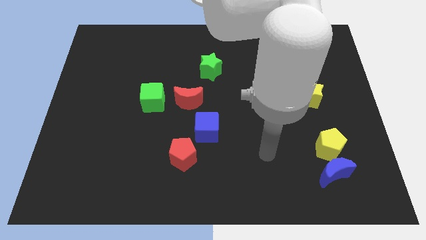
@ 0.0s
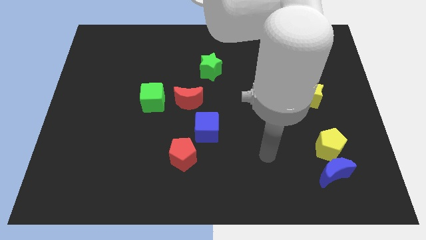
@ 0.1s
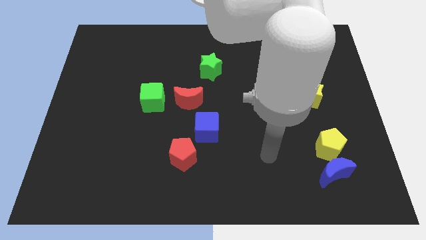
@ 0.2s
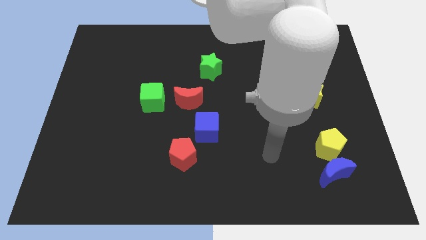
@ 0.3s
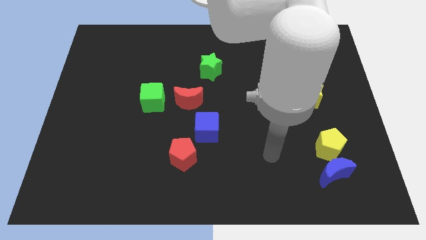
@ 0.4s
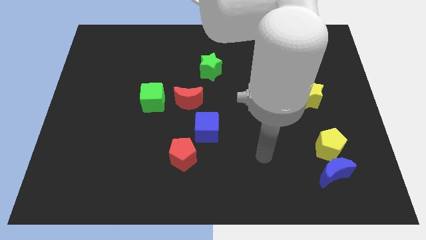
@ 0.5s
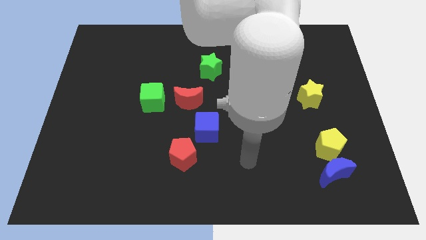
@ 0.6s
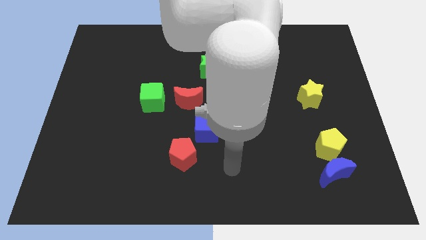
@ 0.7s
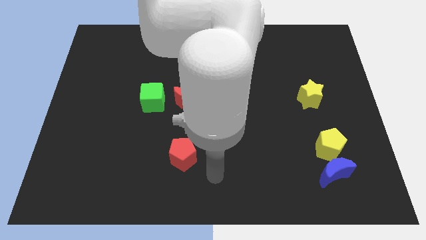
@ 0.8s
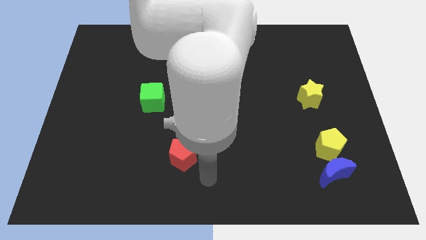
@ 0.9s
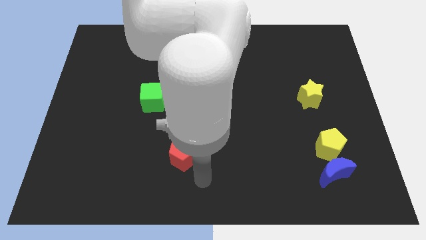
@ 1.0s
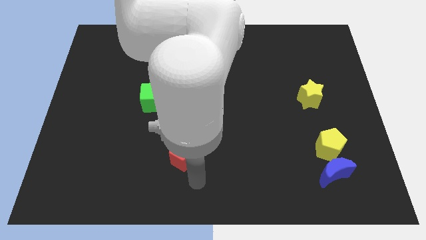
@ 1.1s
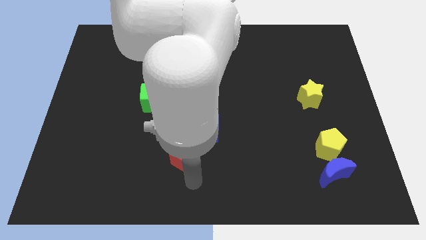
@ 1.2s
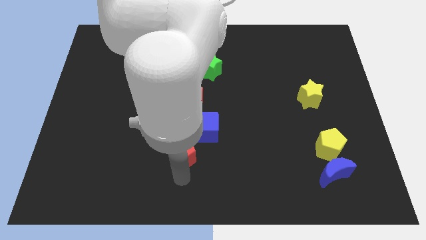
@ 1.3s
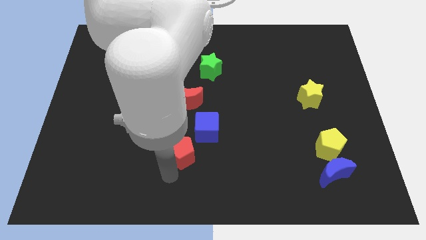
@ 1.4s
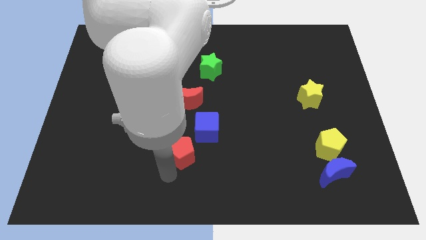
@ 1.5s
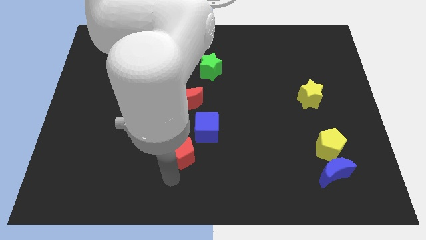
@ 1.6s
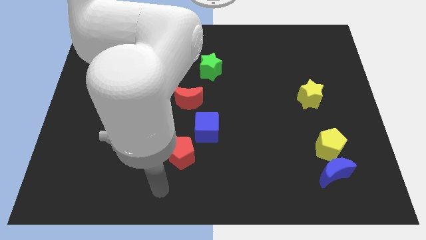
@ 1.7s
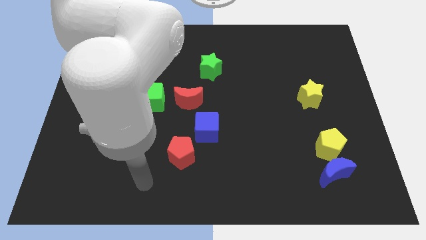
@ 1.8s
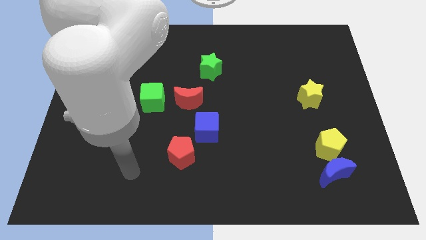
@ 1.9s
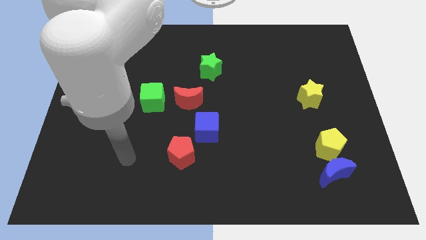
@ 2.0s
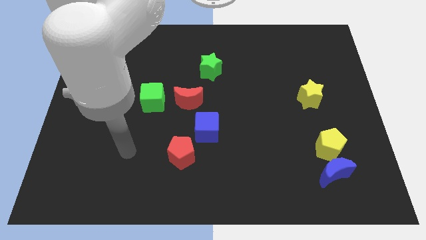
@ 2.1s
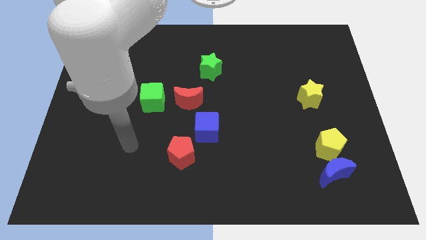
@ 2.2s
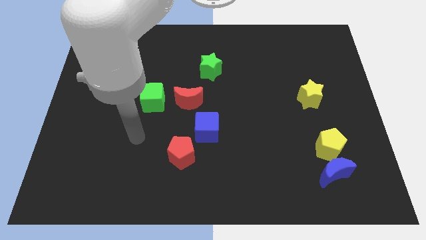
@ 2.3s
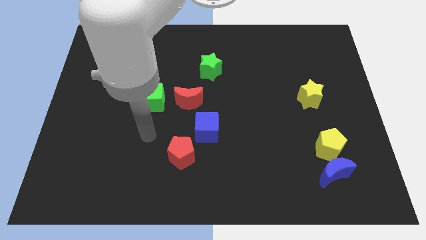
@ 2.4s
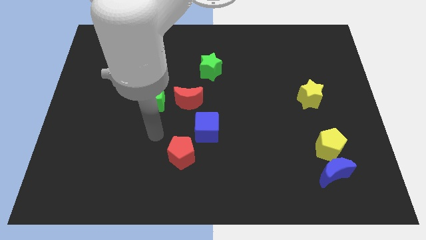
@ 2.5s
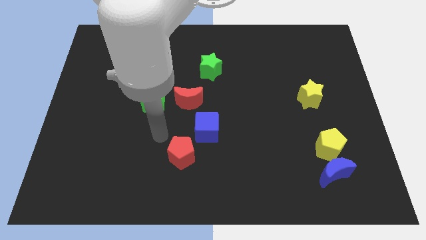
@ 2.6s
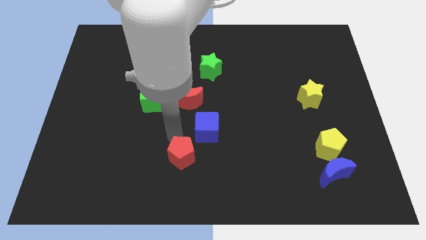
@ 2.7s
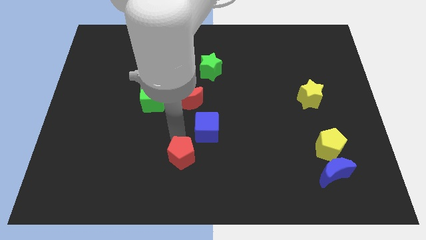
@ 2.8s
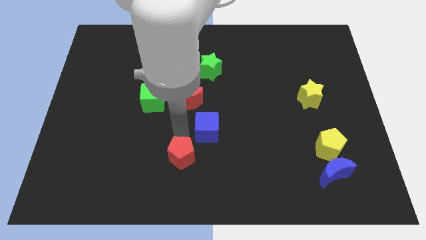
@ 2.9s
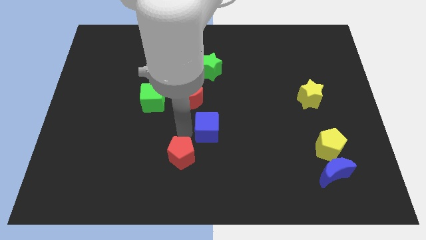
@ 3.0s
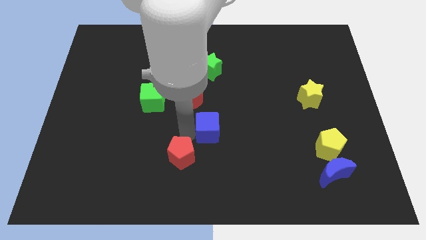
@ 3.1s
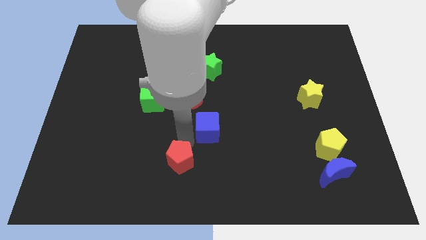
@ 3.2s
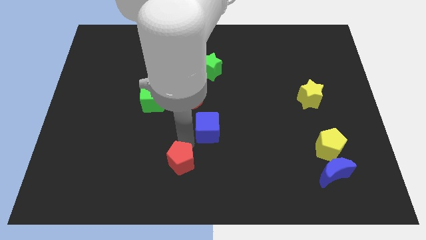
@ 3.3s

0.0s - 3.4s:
slightly move the red pentagon to the bottom center

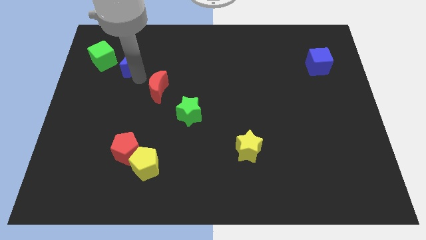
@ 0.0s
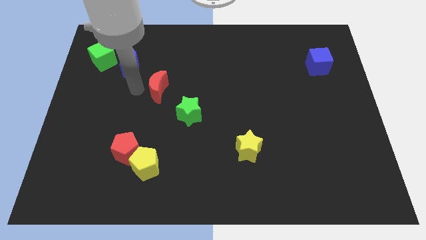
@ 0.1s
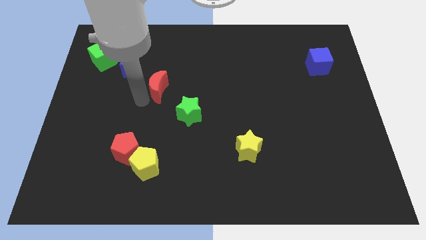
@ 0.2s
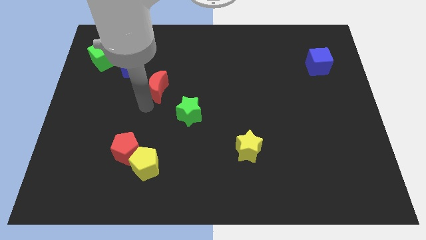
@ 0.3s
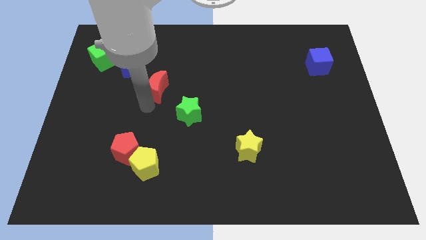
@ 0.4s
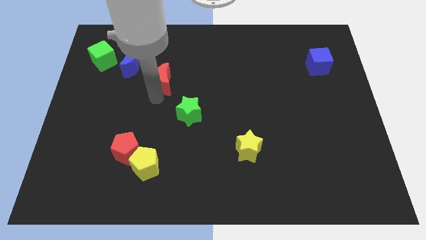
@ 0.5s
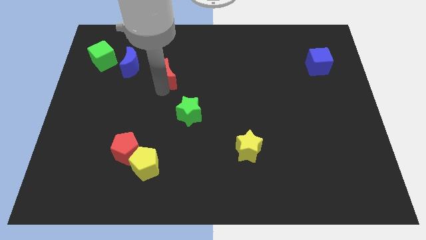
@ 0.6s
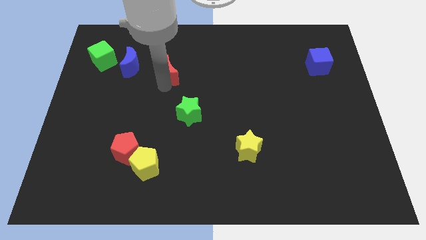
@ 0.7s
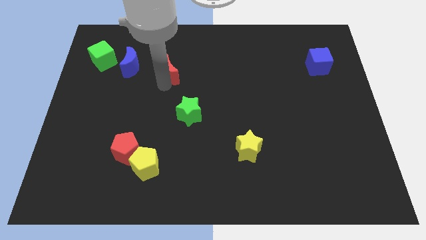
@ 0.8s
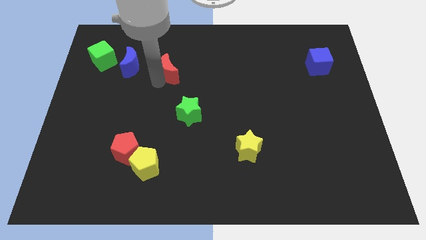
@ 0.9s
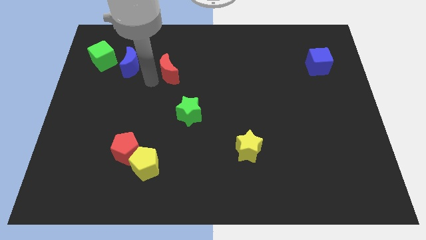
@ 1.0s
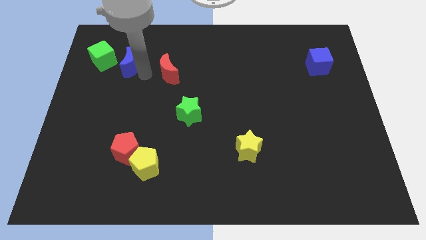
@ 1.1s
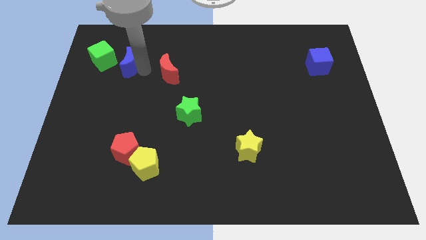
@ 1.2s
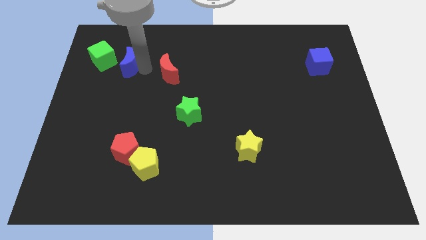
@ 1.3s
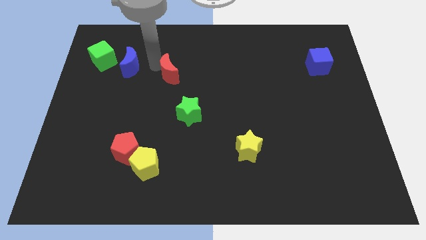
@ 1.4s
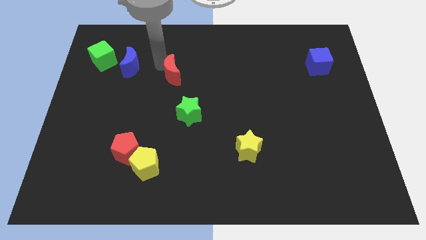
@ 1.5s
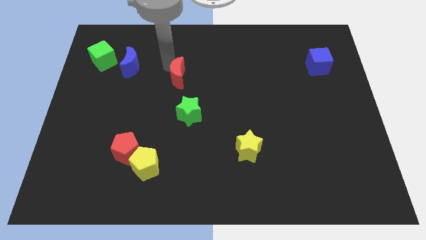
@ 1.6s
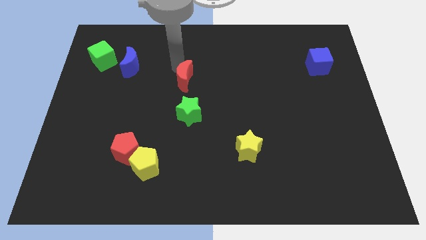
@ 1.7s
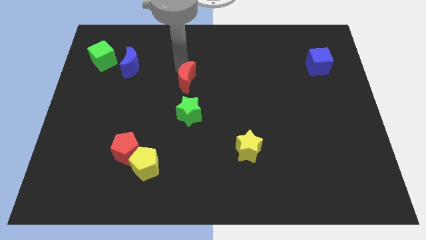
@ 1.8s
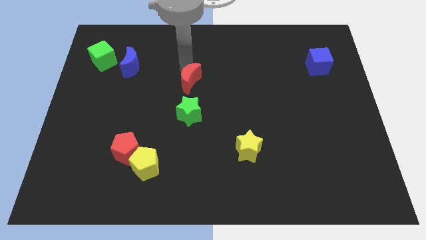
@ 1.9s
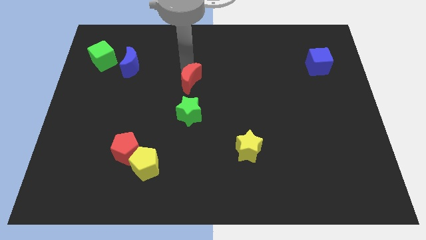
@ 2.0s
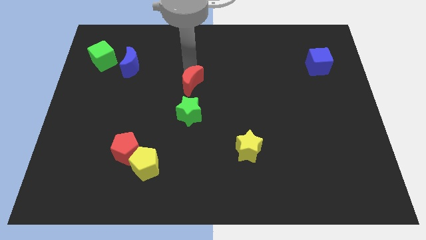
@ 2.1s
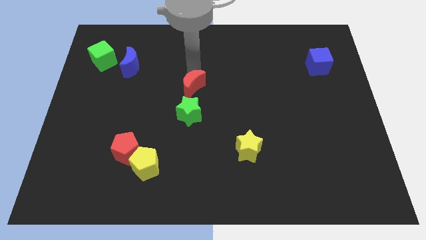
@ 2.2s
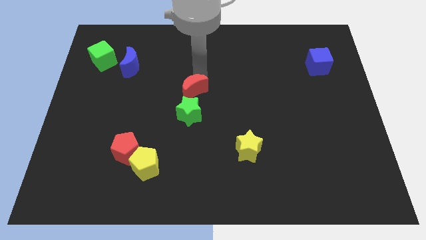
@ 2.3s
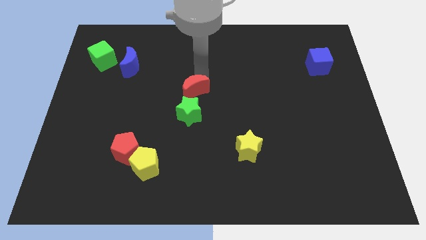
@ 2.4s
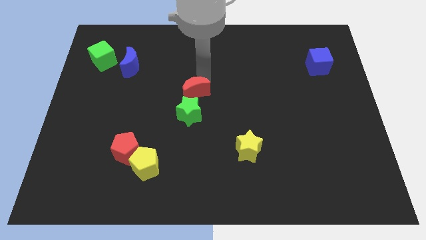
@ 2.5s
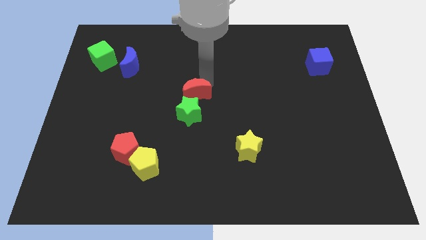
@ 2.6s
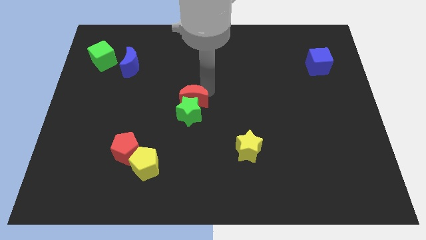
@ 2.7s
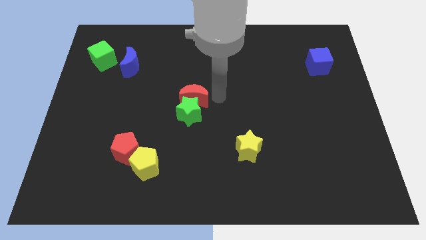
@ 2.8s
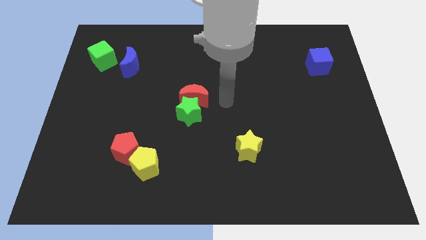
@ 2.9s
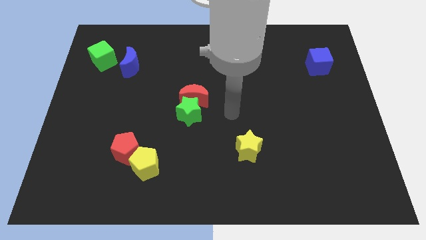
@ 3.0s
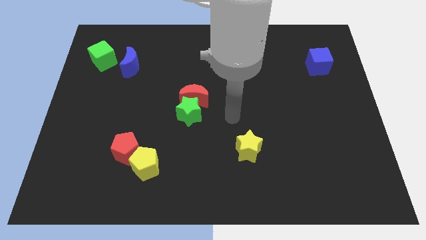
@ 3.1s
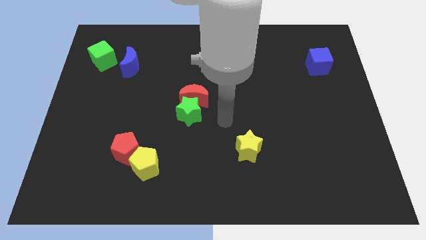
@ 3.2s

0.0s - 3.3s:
move the red crescent on top of the green star

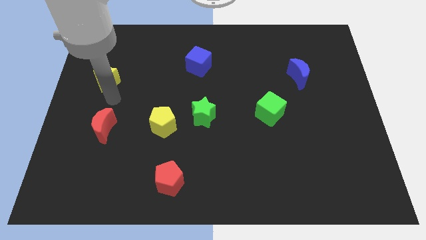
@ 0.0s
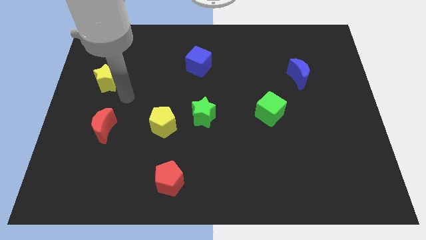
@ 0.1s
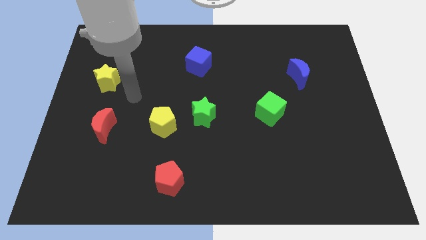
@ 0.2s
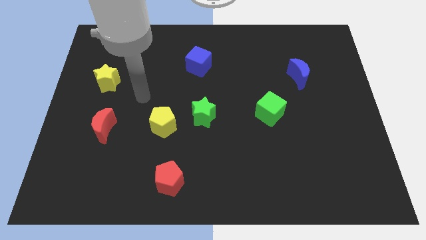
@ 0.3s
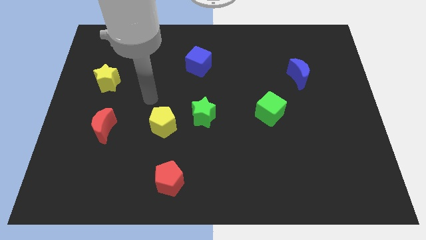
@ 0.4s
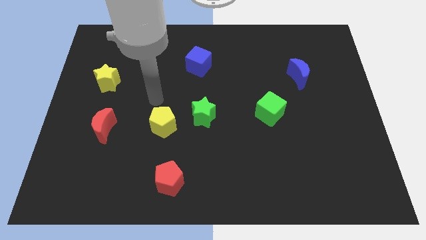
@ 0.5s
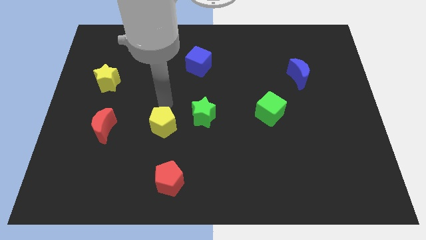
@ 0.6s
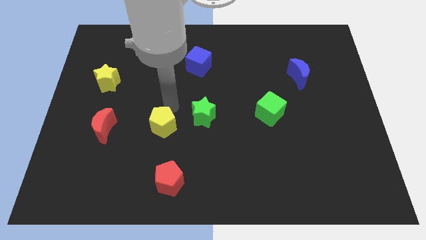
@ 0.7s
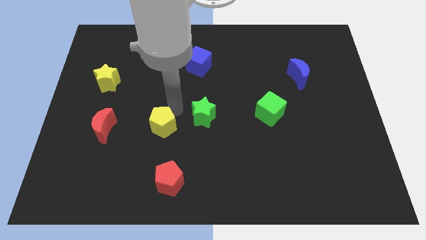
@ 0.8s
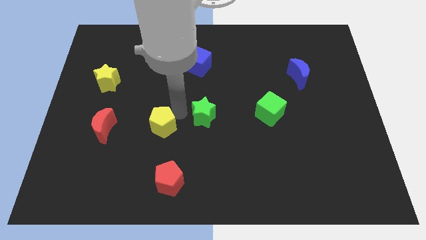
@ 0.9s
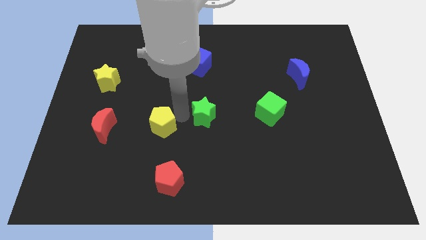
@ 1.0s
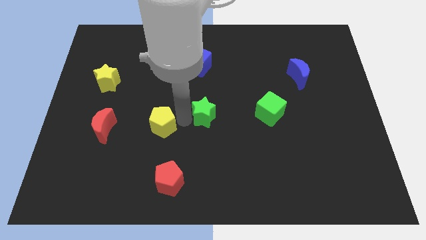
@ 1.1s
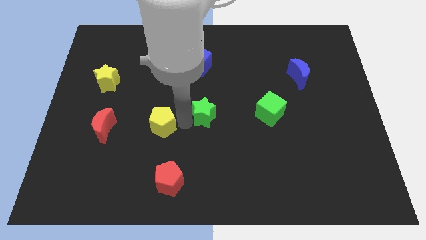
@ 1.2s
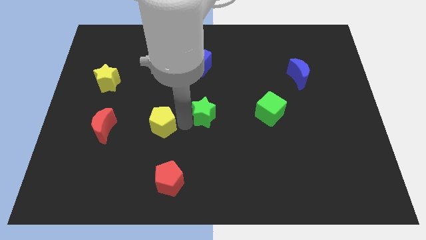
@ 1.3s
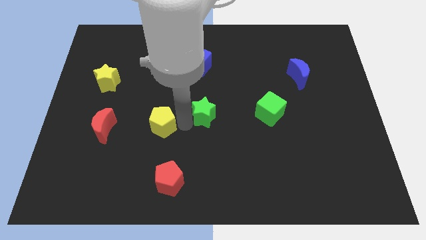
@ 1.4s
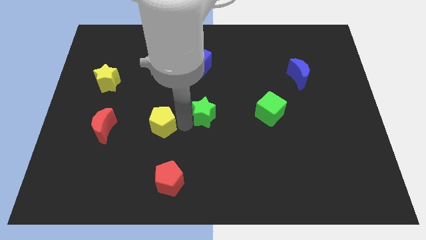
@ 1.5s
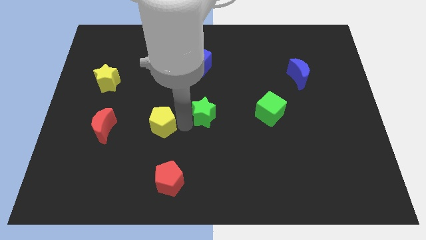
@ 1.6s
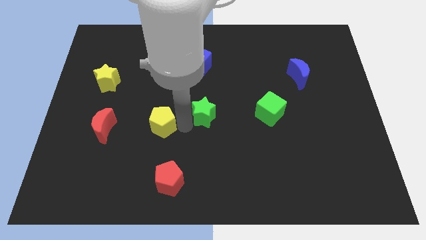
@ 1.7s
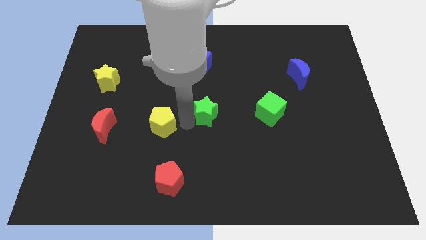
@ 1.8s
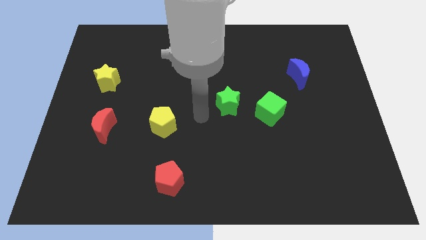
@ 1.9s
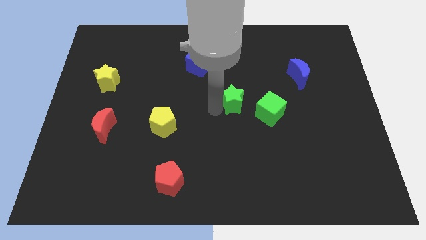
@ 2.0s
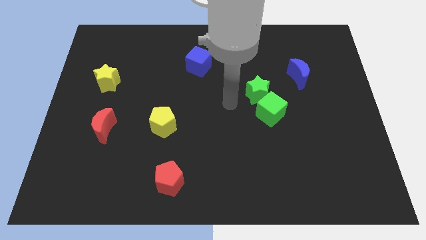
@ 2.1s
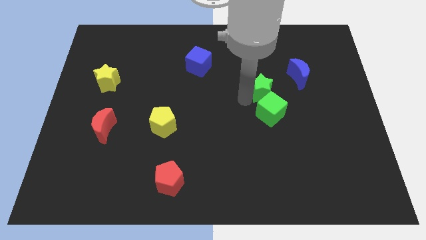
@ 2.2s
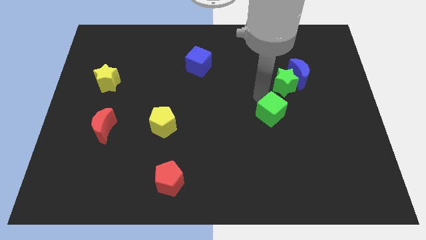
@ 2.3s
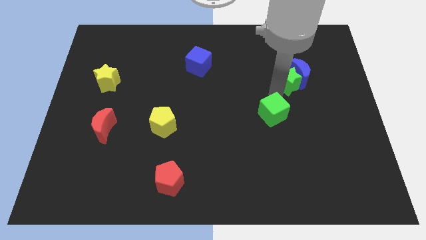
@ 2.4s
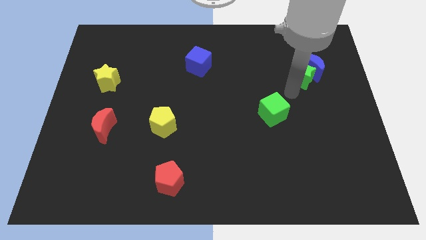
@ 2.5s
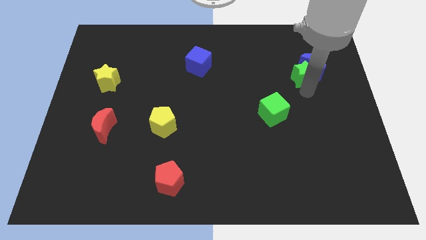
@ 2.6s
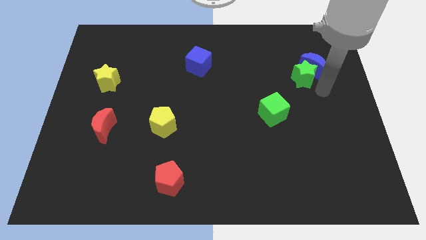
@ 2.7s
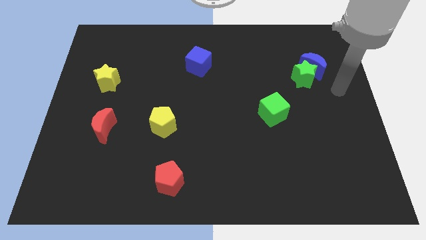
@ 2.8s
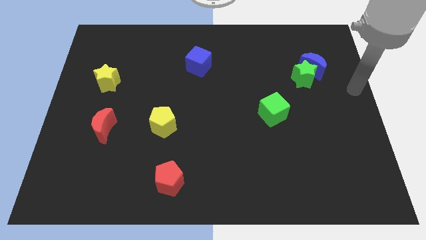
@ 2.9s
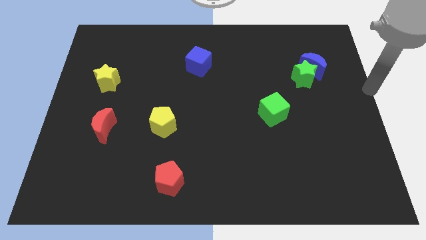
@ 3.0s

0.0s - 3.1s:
push the green star into the blue moon
